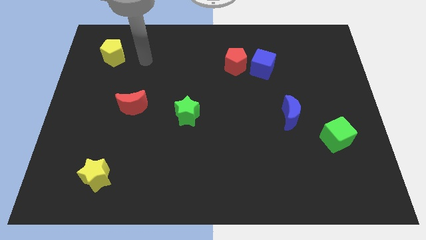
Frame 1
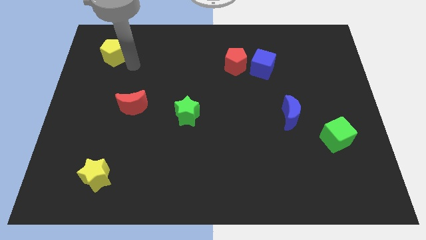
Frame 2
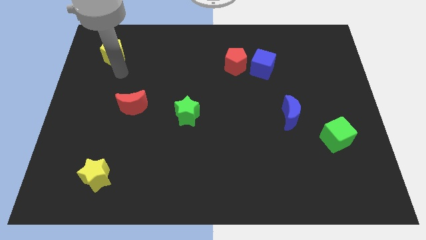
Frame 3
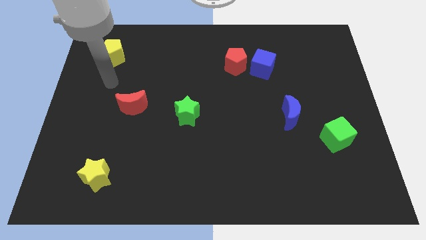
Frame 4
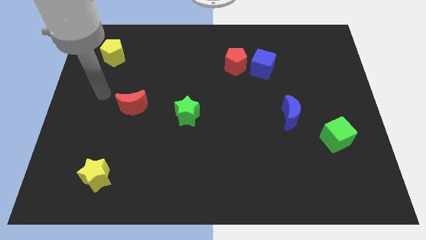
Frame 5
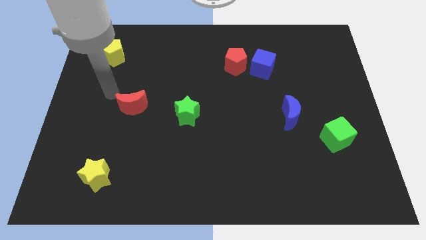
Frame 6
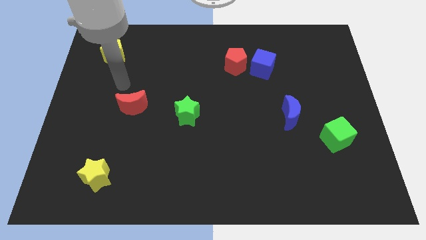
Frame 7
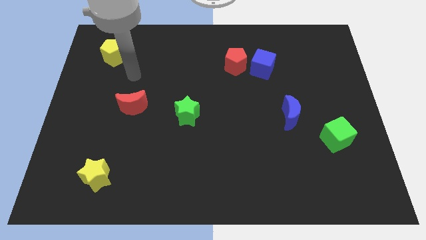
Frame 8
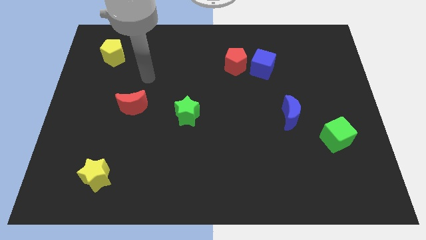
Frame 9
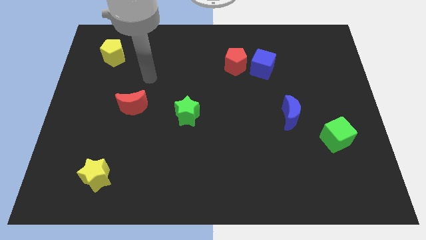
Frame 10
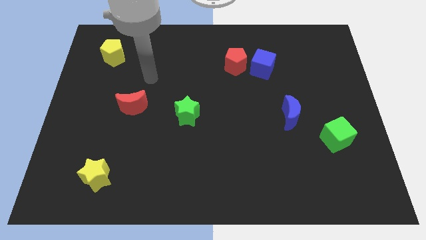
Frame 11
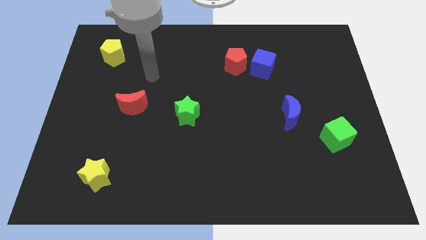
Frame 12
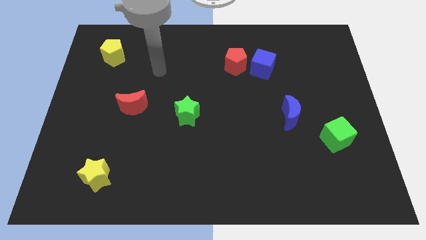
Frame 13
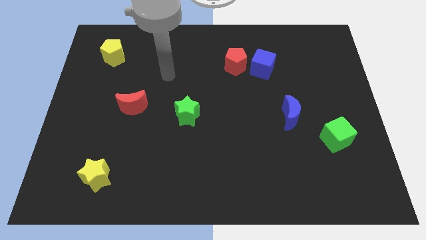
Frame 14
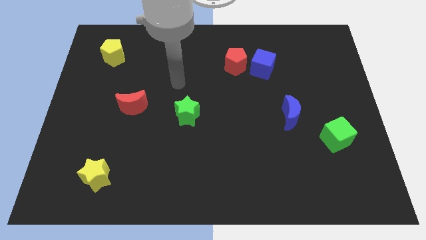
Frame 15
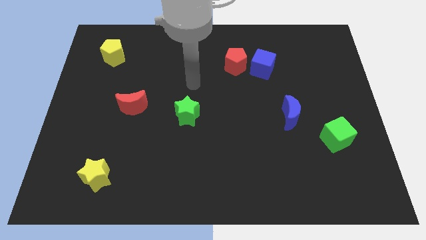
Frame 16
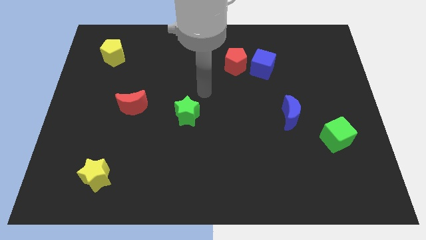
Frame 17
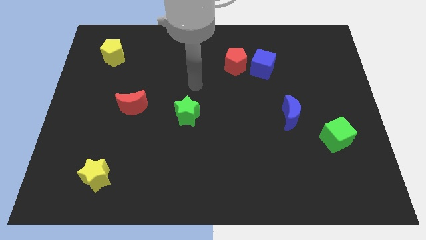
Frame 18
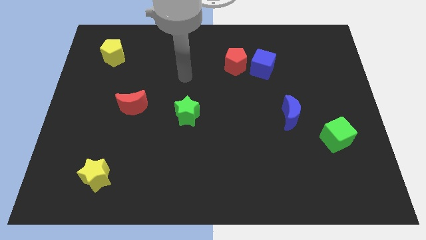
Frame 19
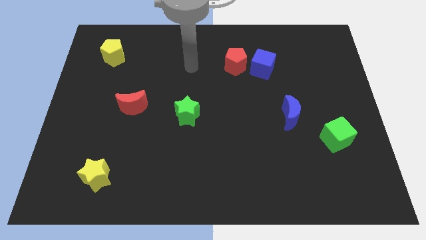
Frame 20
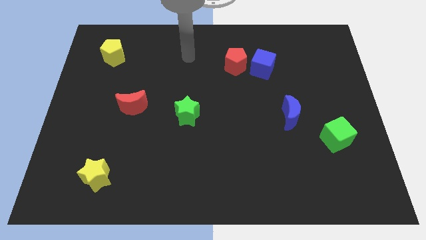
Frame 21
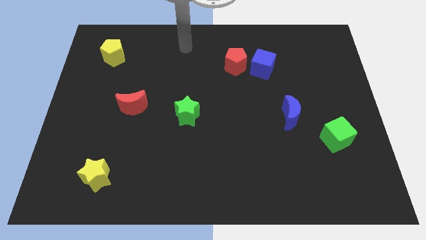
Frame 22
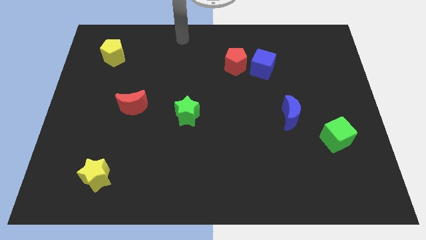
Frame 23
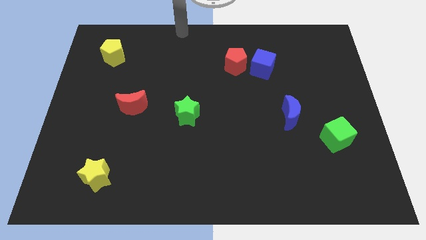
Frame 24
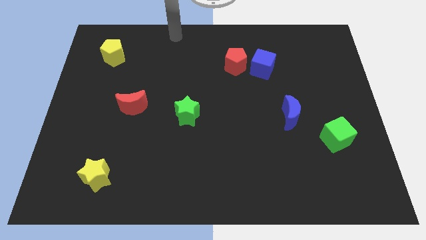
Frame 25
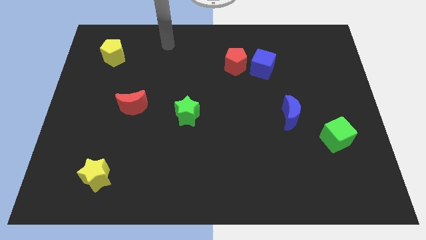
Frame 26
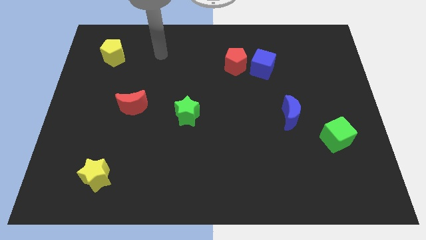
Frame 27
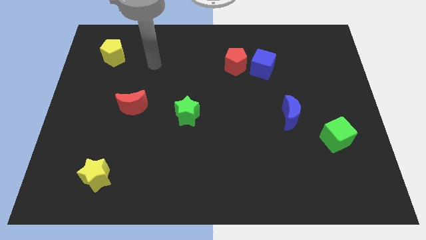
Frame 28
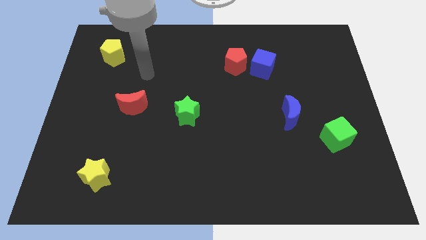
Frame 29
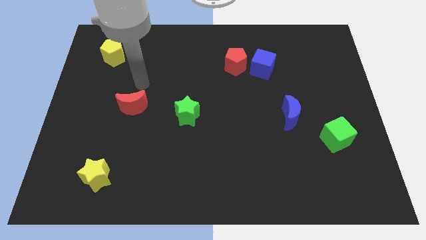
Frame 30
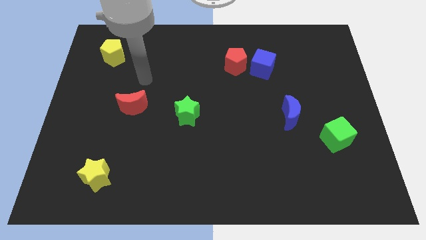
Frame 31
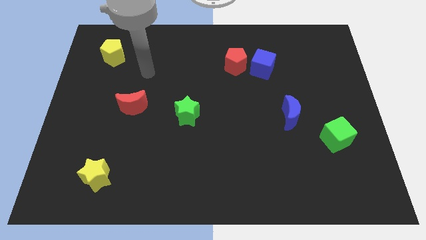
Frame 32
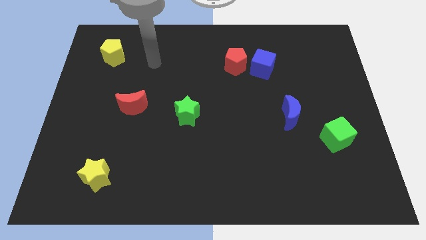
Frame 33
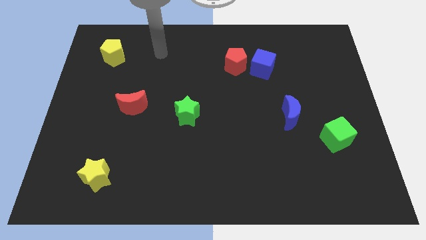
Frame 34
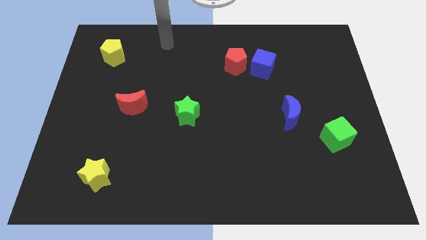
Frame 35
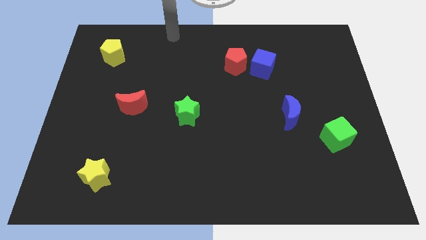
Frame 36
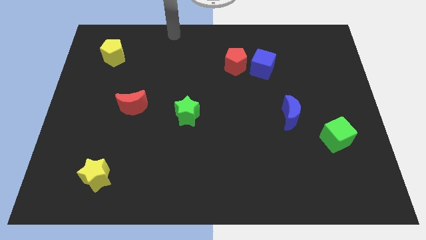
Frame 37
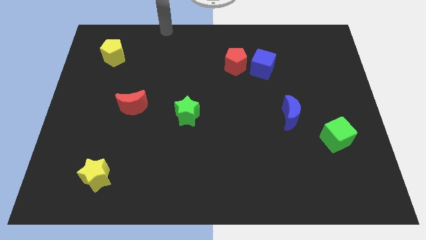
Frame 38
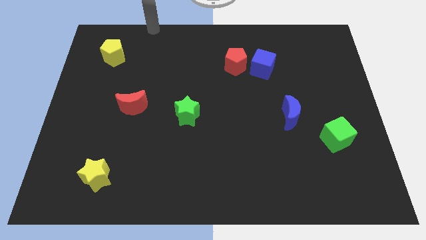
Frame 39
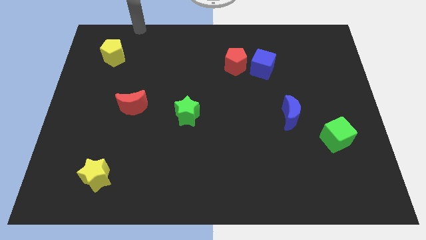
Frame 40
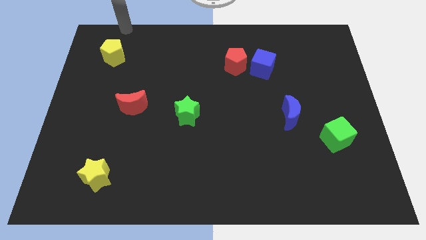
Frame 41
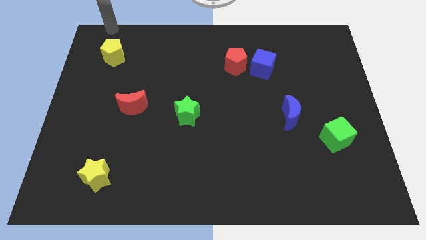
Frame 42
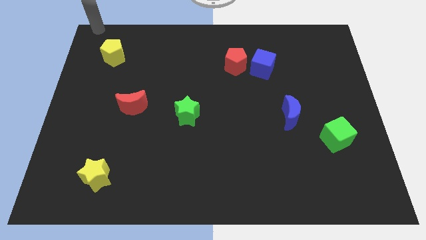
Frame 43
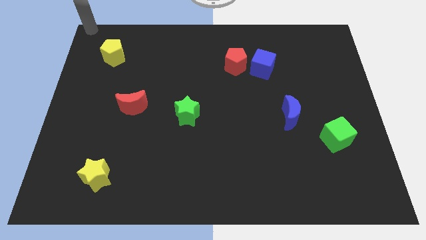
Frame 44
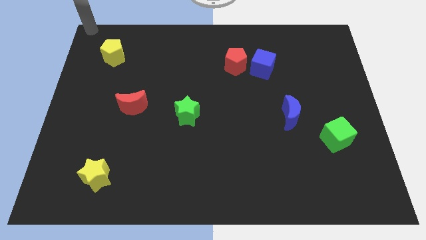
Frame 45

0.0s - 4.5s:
move your arm to the top left

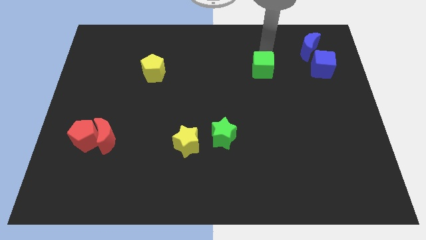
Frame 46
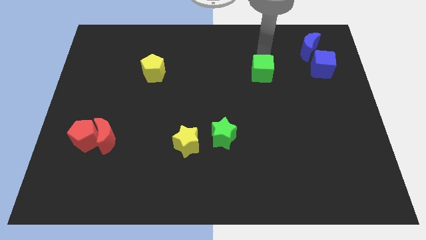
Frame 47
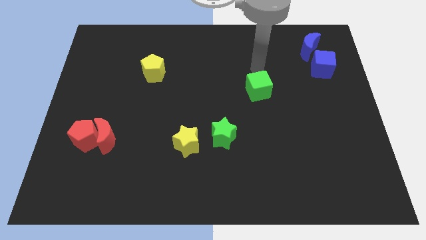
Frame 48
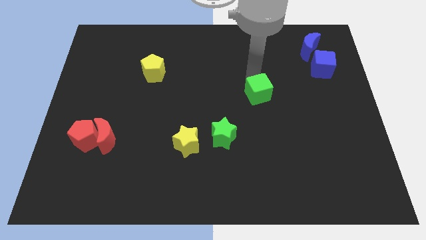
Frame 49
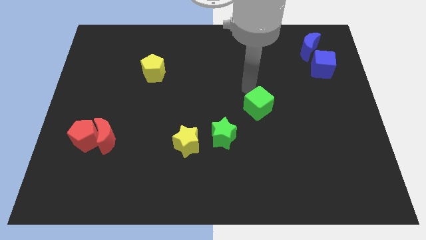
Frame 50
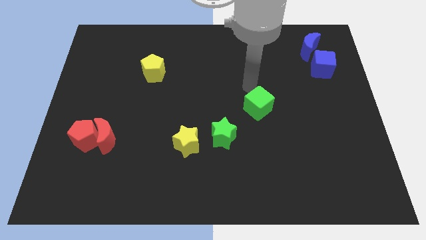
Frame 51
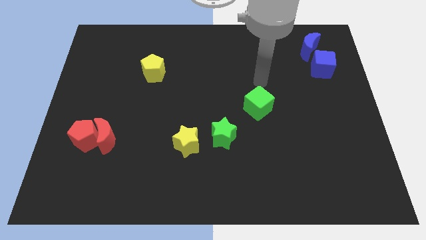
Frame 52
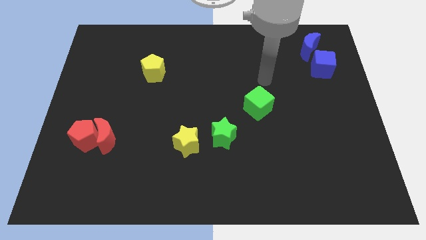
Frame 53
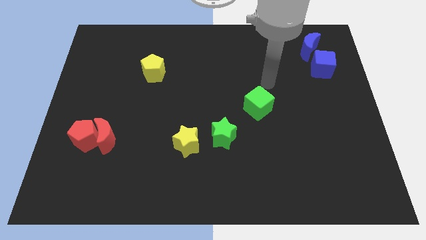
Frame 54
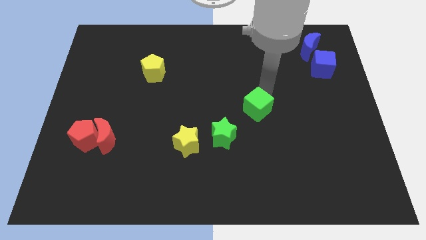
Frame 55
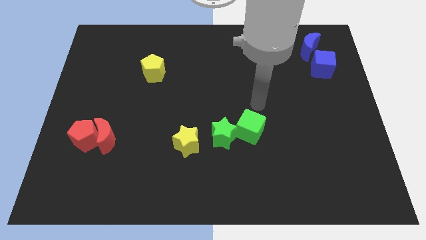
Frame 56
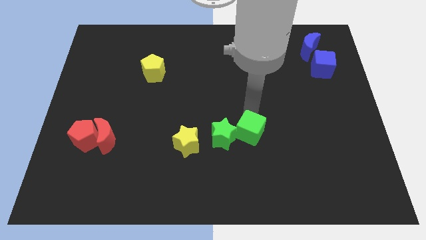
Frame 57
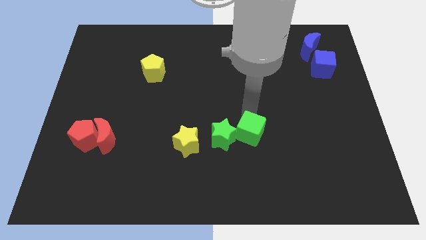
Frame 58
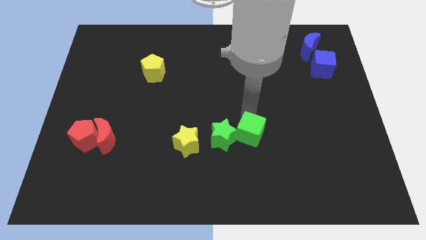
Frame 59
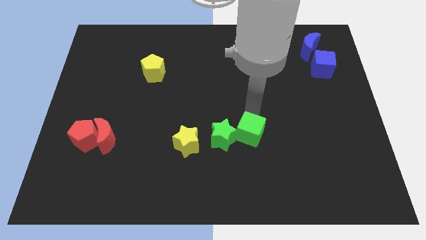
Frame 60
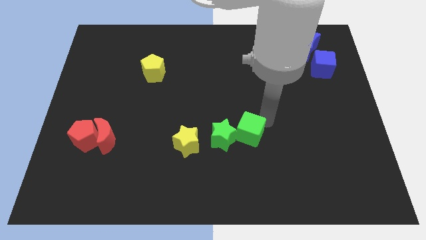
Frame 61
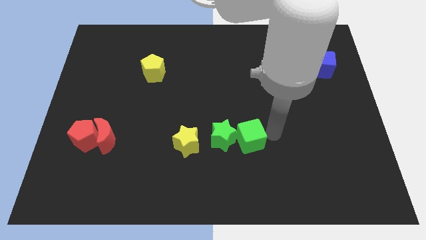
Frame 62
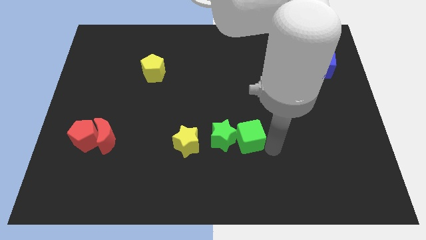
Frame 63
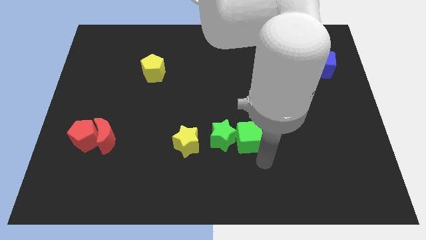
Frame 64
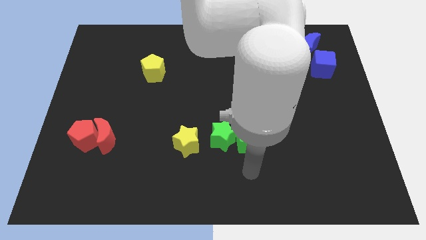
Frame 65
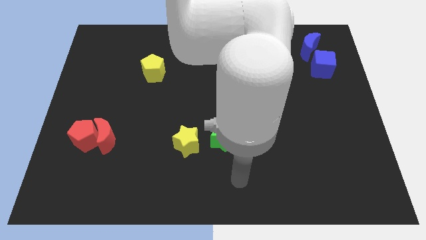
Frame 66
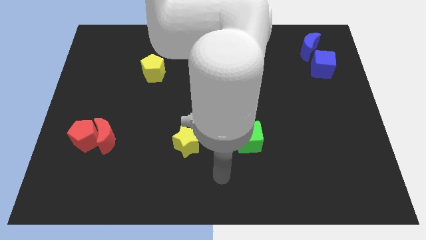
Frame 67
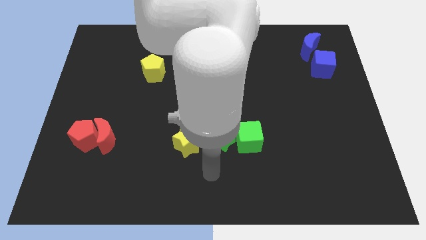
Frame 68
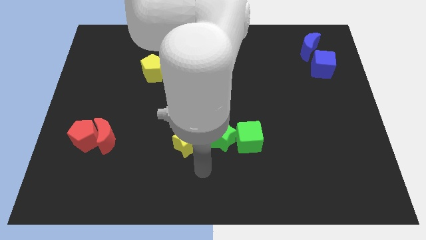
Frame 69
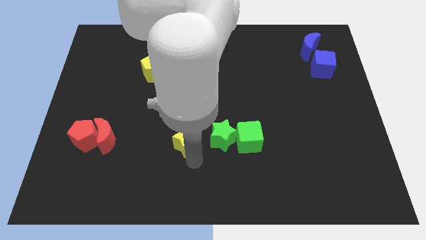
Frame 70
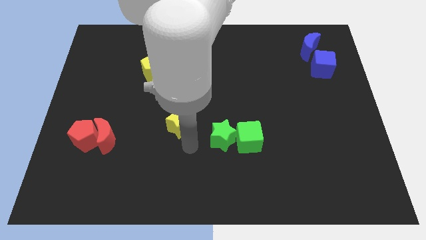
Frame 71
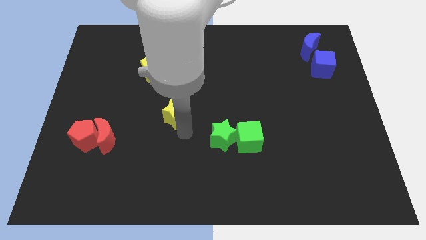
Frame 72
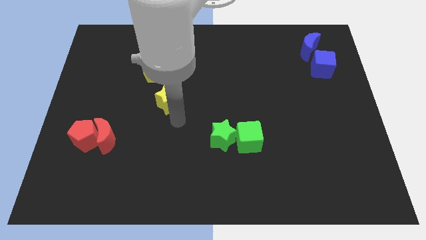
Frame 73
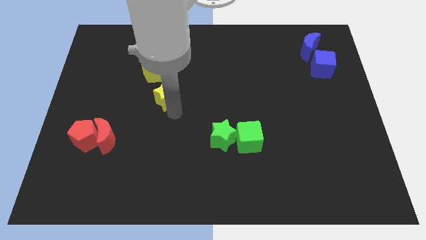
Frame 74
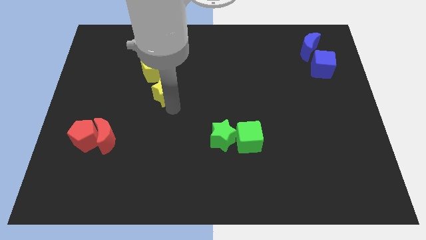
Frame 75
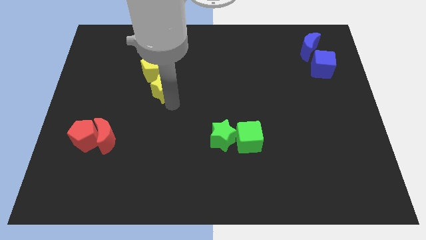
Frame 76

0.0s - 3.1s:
push the green cube into green star

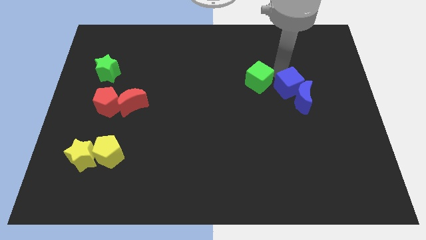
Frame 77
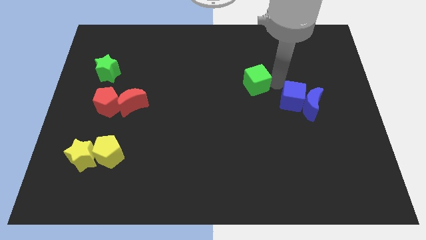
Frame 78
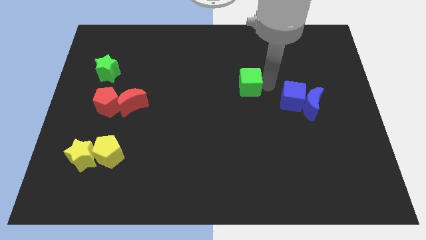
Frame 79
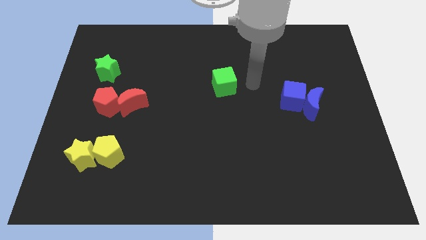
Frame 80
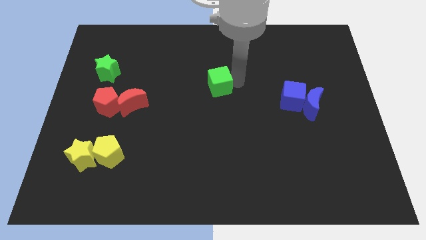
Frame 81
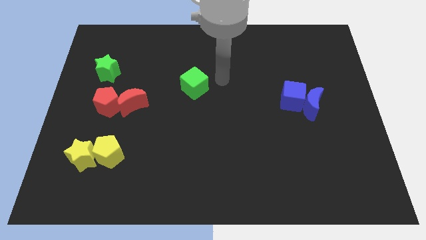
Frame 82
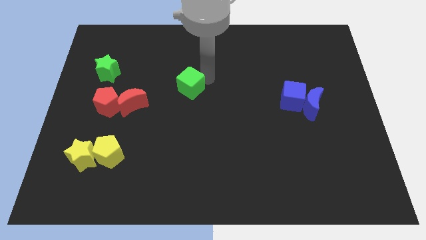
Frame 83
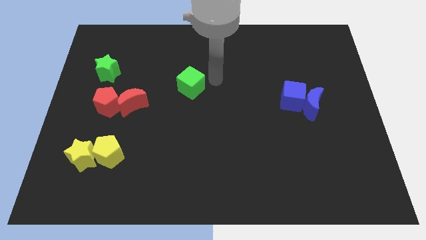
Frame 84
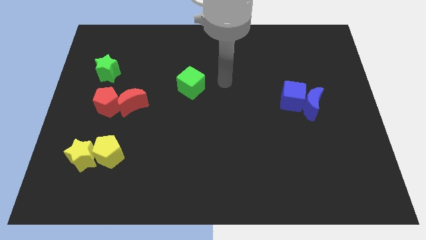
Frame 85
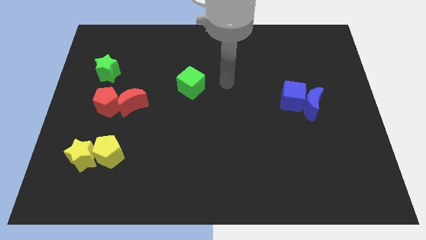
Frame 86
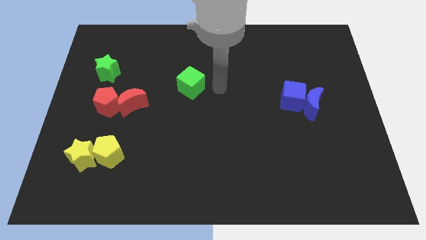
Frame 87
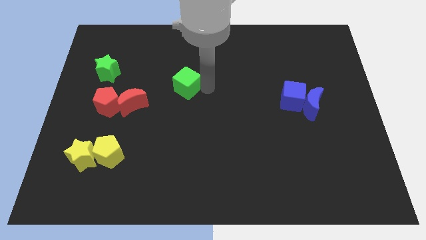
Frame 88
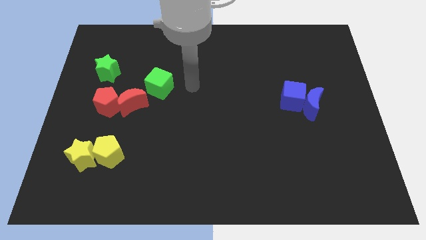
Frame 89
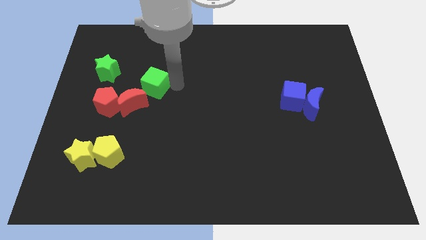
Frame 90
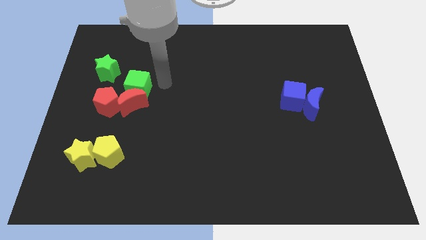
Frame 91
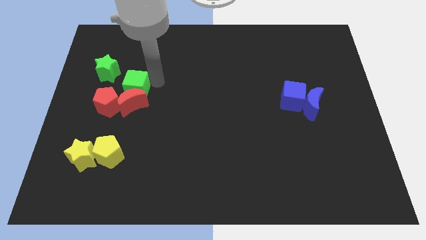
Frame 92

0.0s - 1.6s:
place the green cube vertically above the red moon
